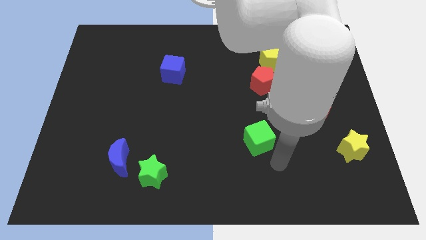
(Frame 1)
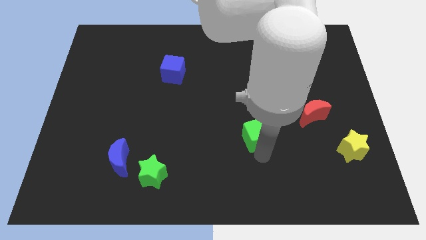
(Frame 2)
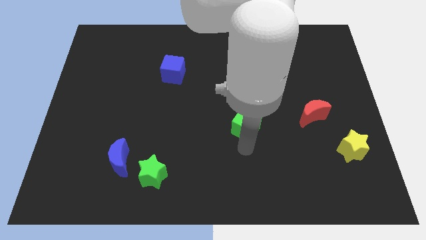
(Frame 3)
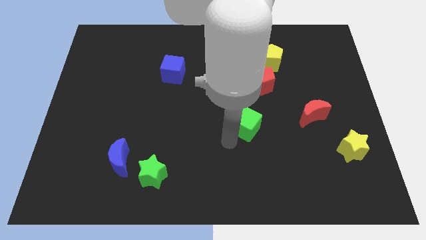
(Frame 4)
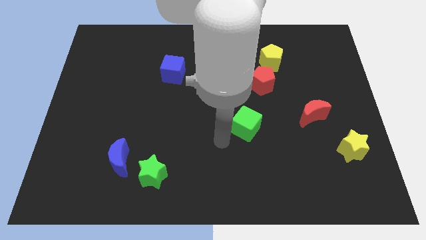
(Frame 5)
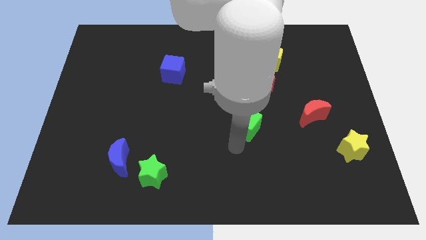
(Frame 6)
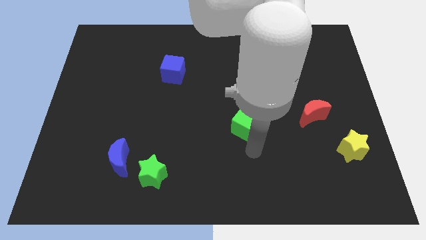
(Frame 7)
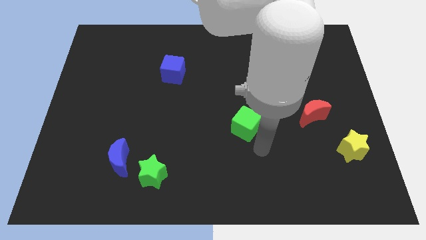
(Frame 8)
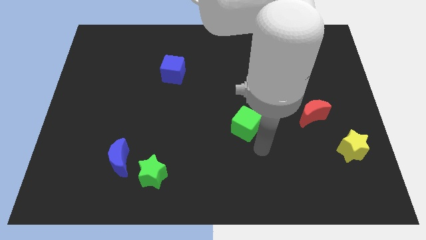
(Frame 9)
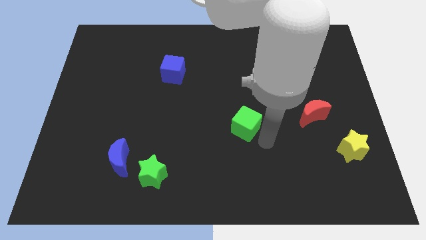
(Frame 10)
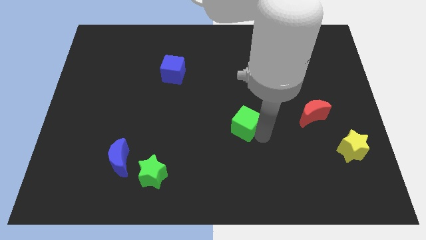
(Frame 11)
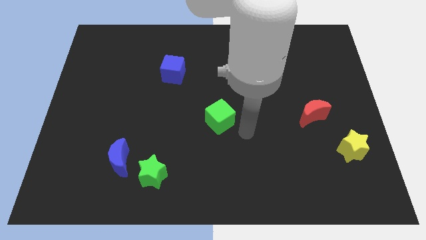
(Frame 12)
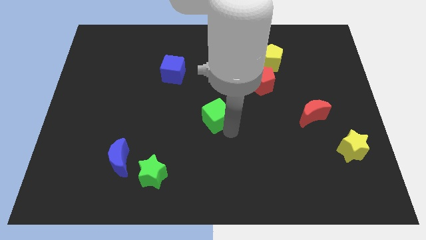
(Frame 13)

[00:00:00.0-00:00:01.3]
put the green cube between the green star and red pentagon

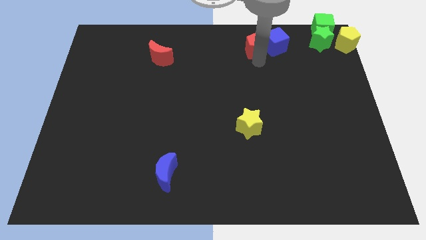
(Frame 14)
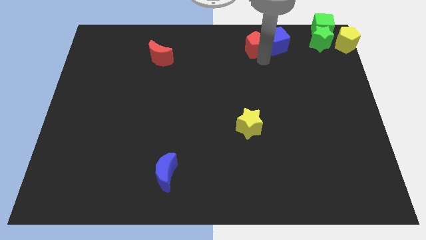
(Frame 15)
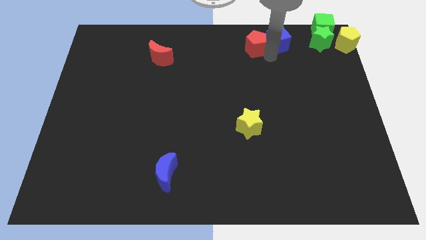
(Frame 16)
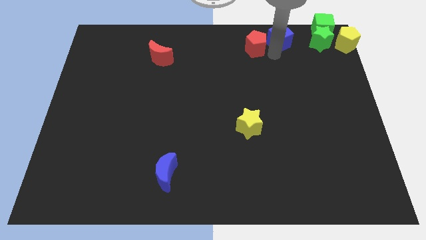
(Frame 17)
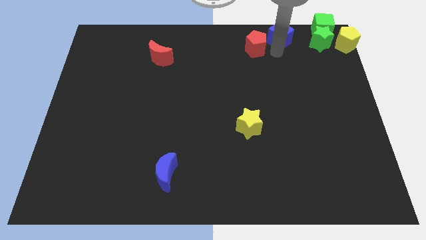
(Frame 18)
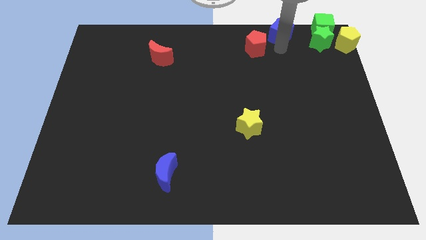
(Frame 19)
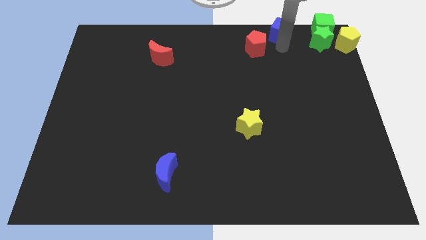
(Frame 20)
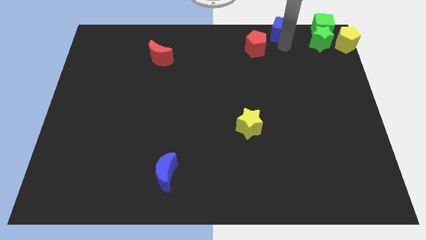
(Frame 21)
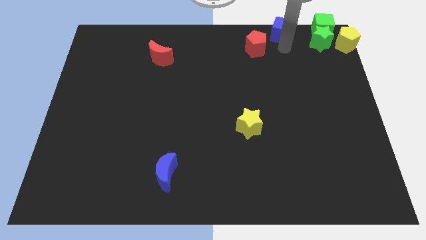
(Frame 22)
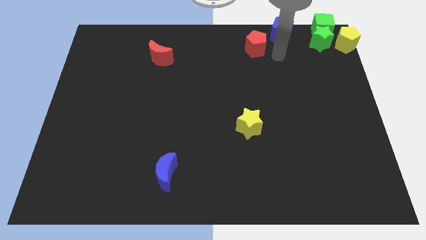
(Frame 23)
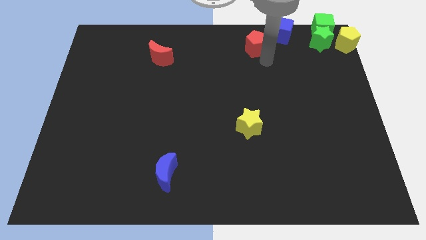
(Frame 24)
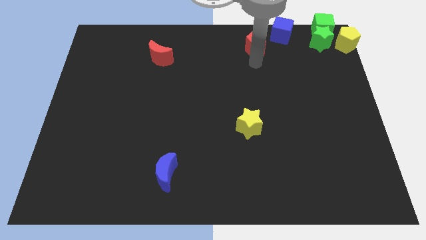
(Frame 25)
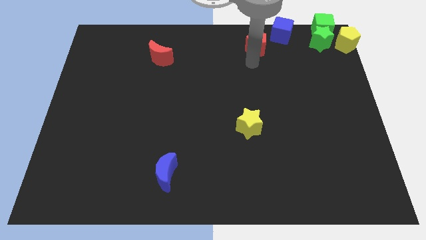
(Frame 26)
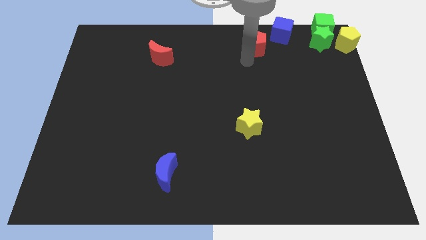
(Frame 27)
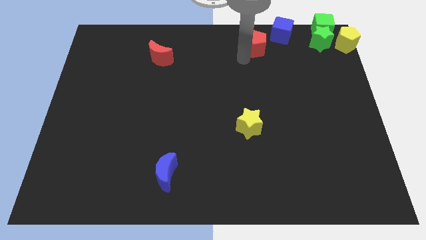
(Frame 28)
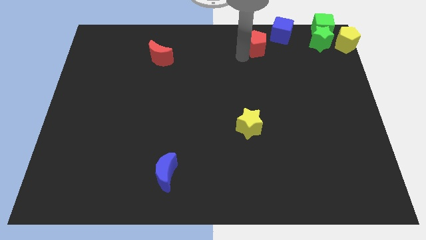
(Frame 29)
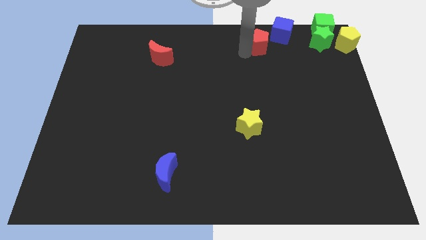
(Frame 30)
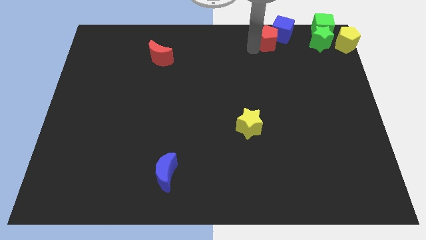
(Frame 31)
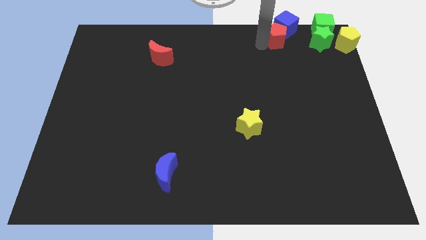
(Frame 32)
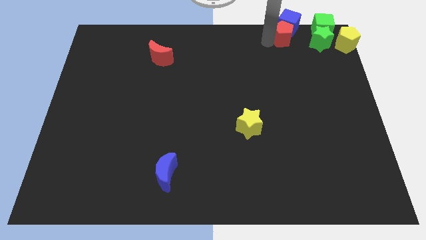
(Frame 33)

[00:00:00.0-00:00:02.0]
move the red pentagon and blue cube towards the group of blocks

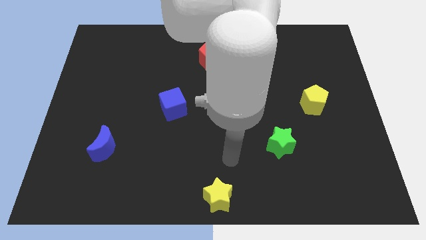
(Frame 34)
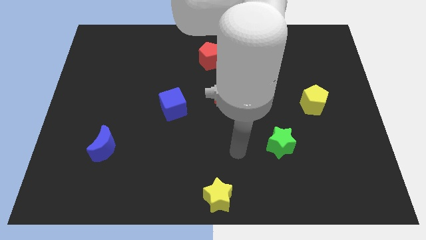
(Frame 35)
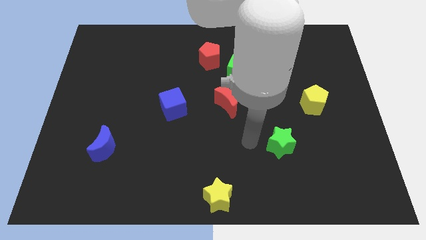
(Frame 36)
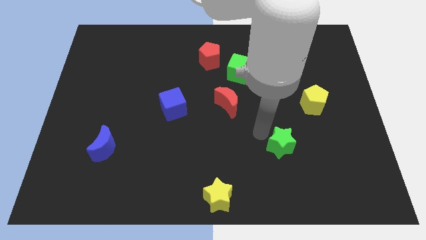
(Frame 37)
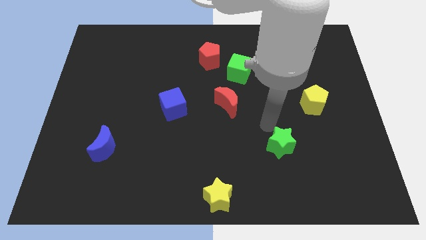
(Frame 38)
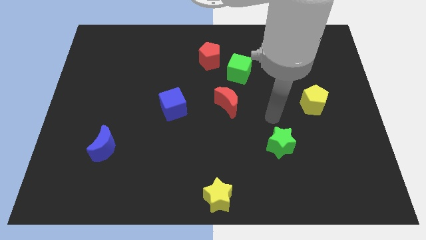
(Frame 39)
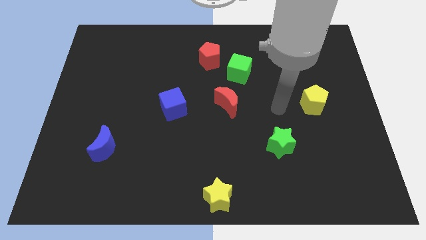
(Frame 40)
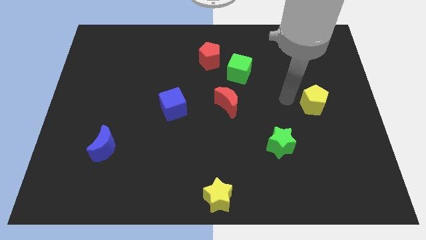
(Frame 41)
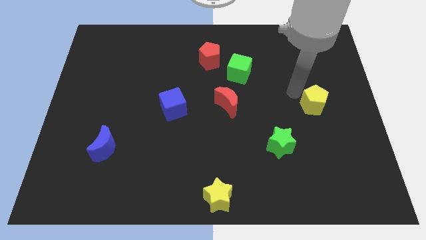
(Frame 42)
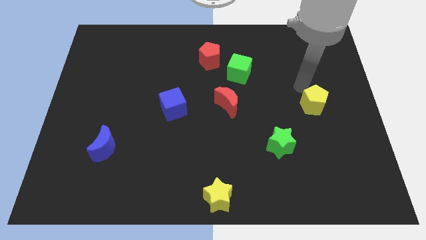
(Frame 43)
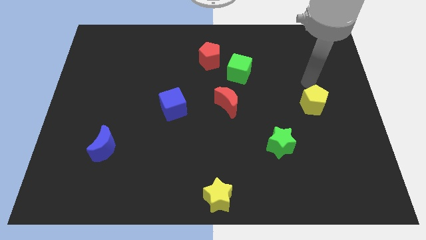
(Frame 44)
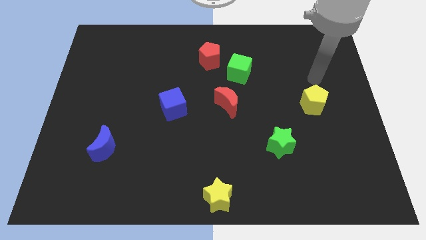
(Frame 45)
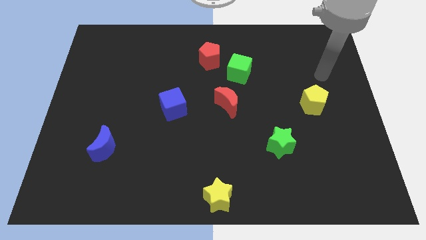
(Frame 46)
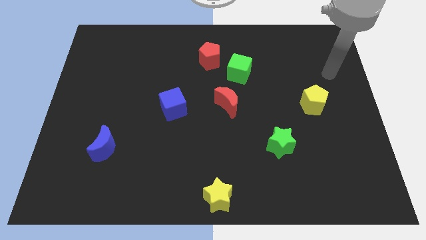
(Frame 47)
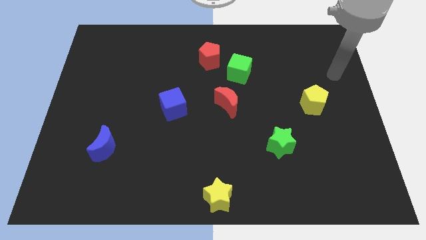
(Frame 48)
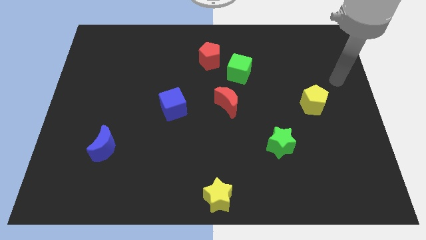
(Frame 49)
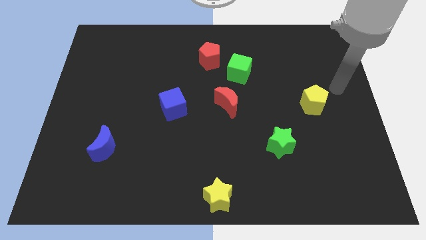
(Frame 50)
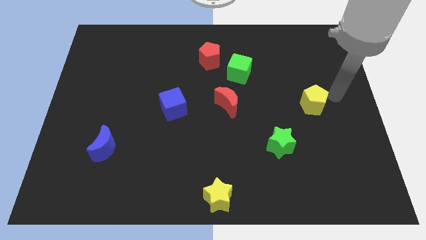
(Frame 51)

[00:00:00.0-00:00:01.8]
move your arm towards the yellow pentagon

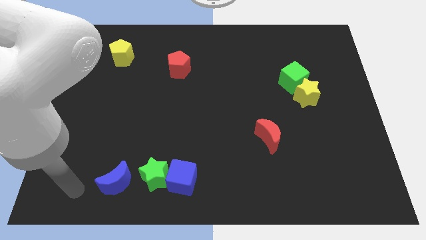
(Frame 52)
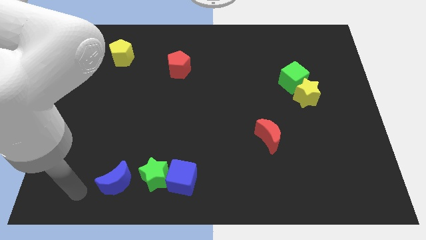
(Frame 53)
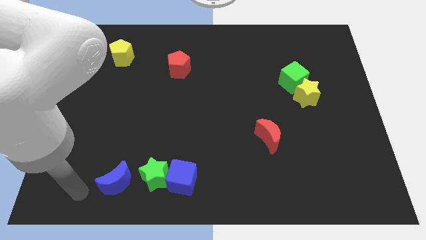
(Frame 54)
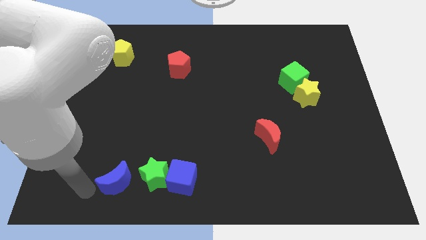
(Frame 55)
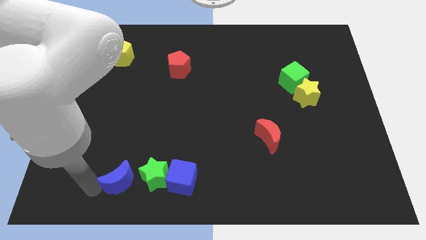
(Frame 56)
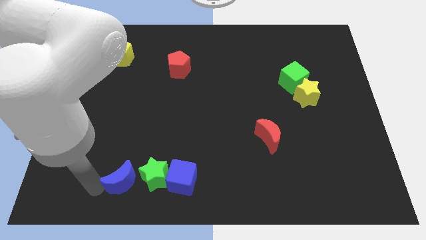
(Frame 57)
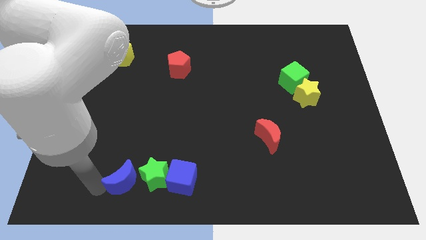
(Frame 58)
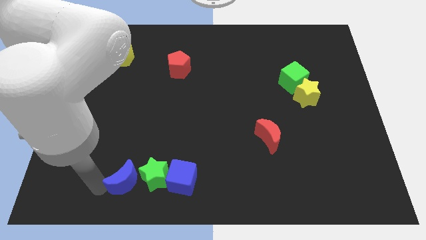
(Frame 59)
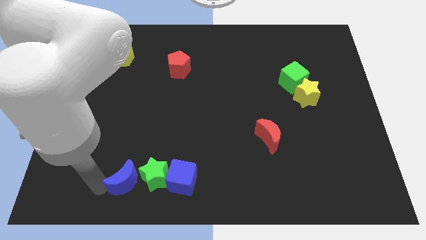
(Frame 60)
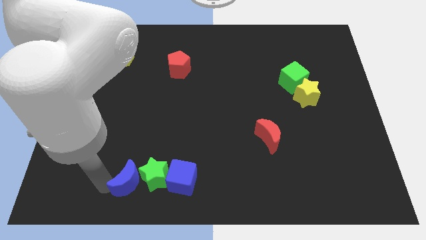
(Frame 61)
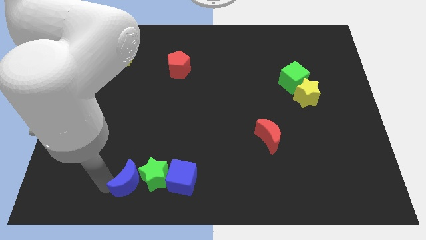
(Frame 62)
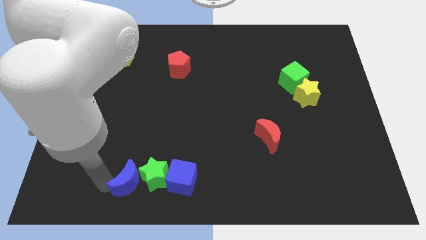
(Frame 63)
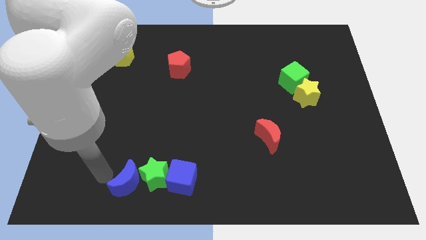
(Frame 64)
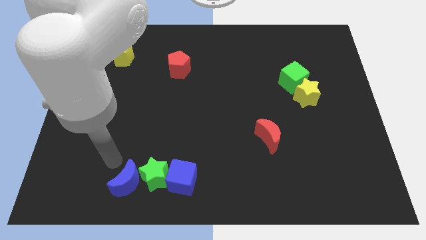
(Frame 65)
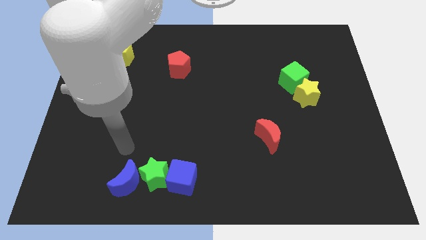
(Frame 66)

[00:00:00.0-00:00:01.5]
move the blue crescent close to the left side of the green star

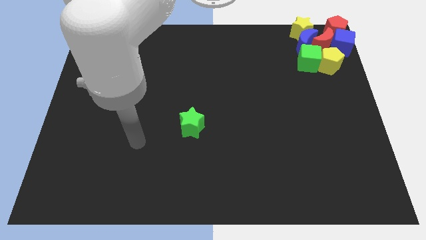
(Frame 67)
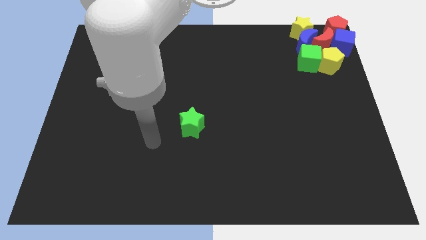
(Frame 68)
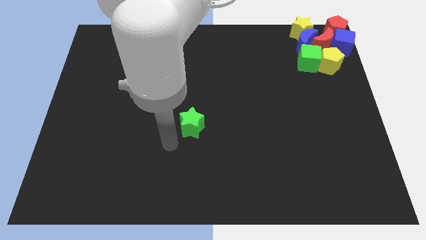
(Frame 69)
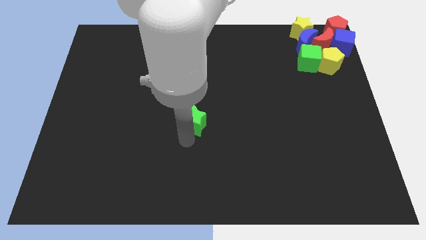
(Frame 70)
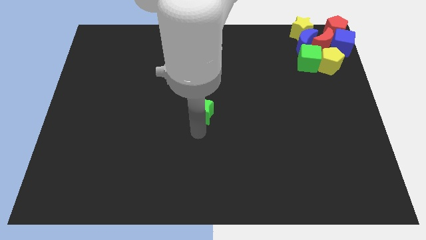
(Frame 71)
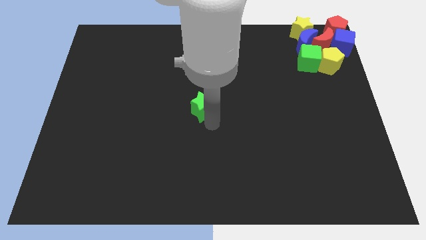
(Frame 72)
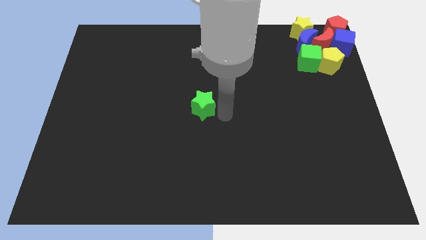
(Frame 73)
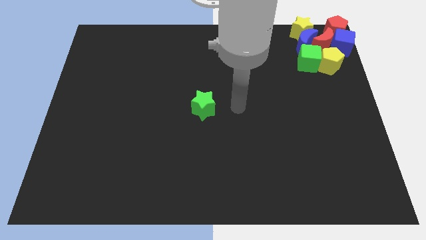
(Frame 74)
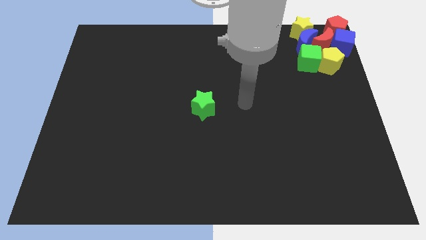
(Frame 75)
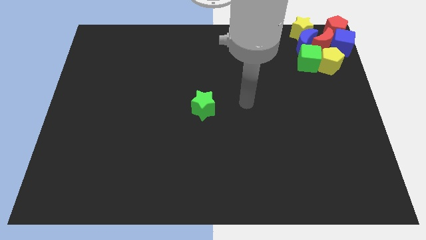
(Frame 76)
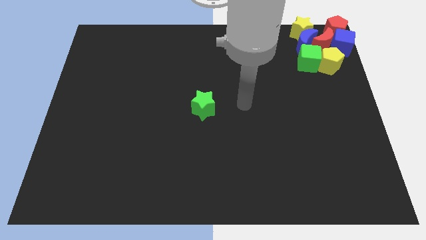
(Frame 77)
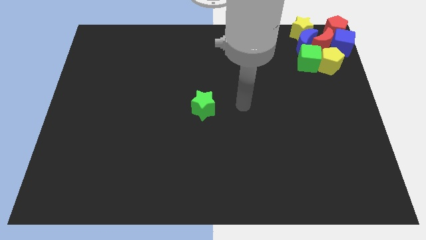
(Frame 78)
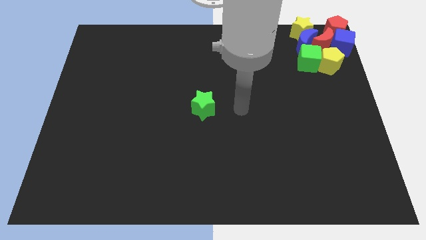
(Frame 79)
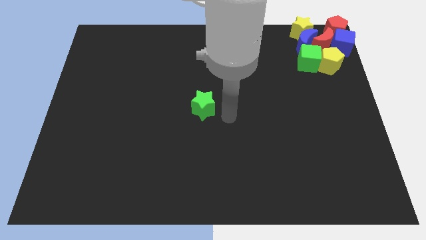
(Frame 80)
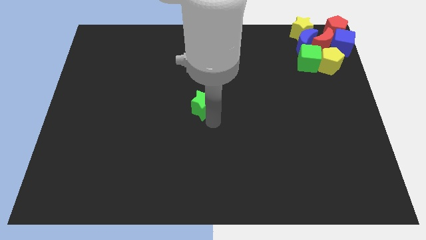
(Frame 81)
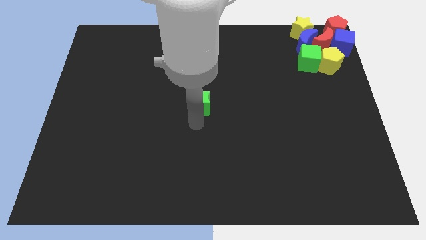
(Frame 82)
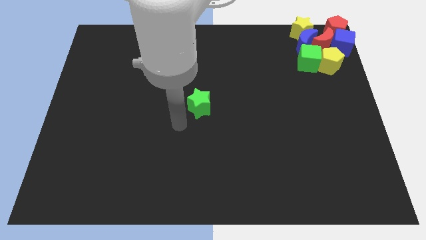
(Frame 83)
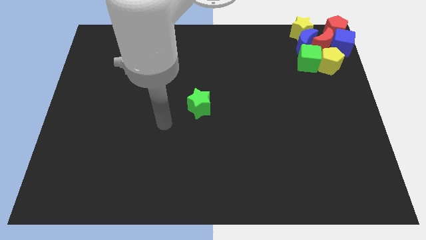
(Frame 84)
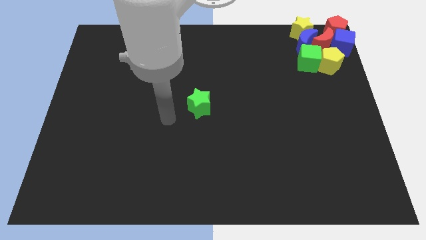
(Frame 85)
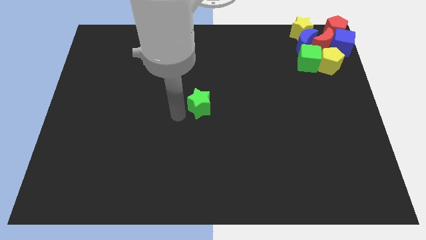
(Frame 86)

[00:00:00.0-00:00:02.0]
push the green star to the center of the board

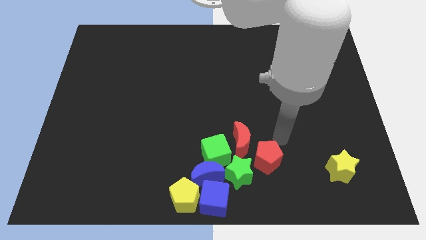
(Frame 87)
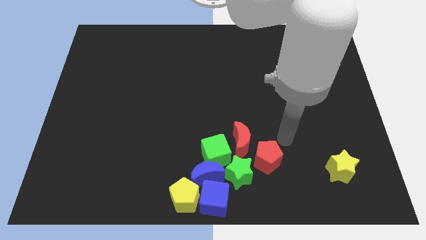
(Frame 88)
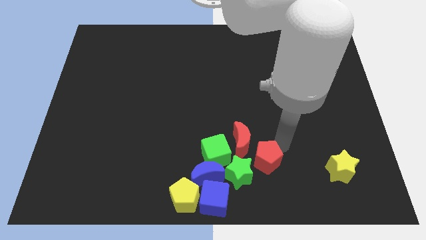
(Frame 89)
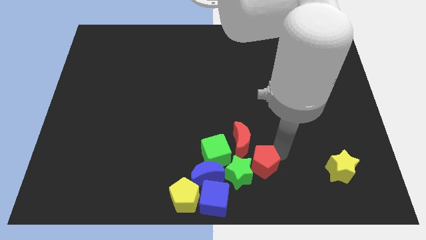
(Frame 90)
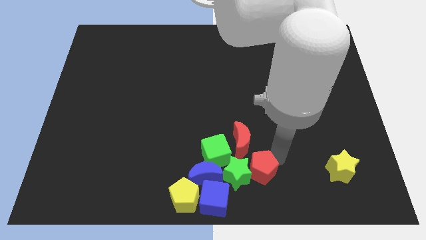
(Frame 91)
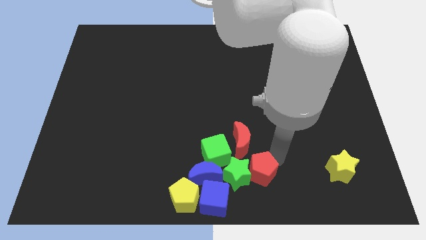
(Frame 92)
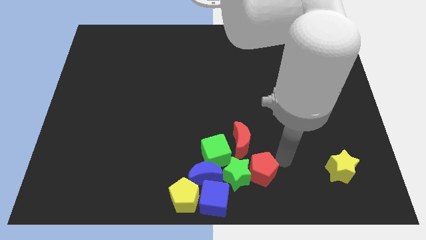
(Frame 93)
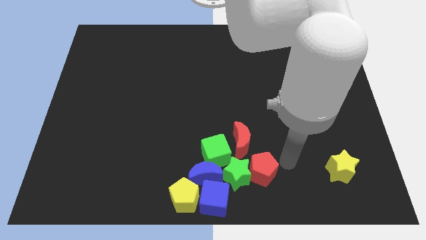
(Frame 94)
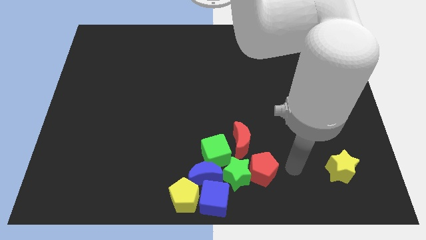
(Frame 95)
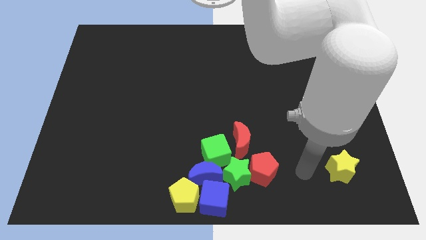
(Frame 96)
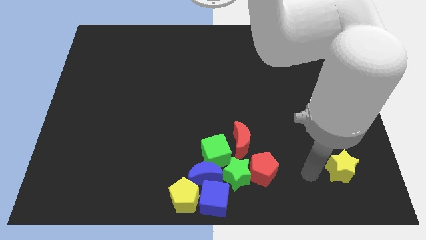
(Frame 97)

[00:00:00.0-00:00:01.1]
move the red pentagon close to the green star
